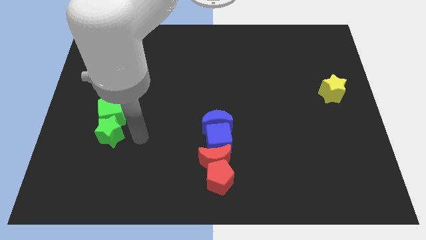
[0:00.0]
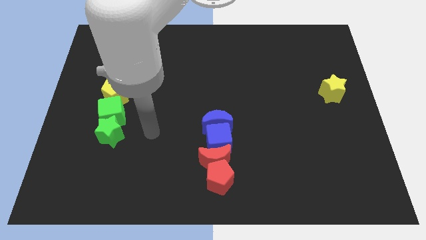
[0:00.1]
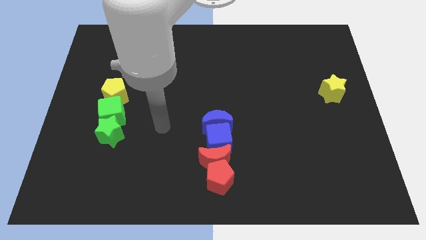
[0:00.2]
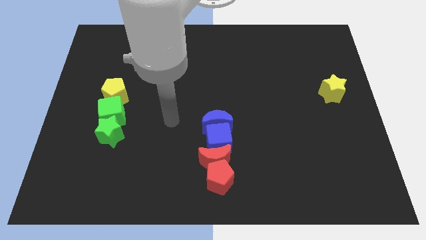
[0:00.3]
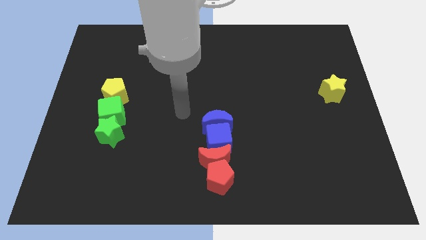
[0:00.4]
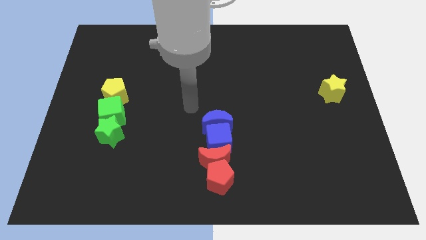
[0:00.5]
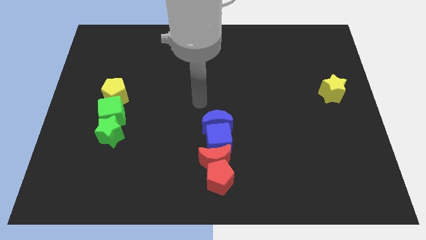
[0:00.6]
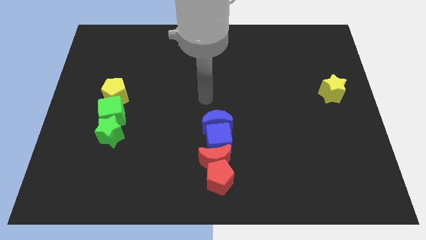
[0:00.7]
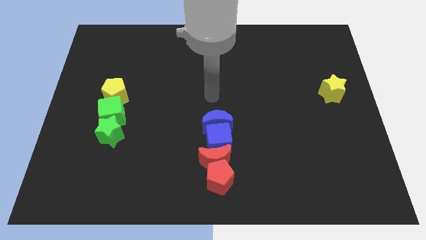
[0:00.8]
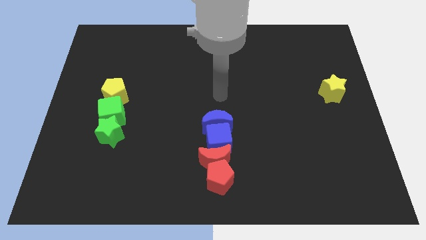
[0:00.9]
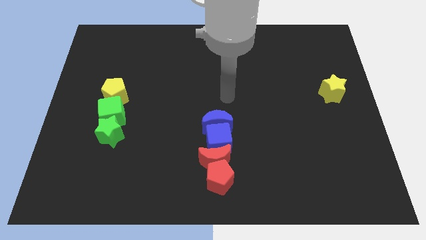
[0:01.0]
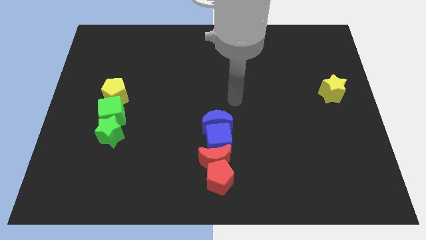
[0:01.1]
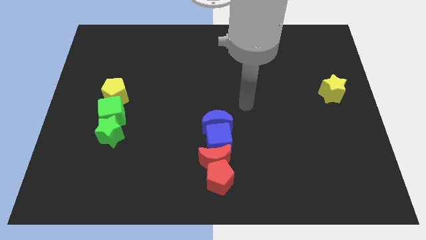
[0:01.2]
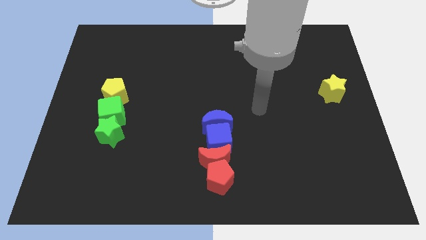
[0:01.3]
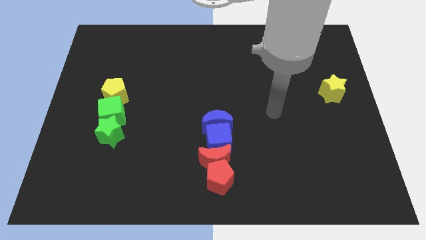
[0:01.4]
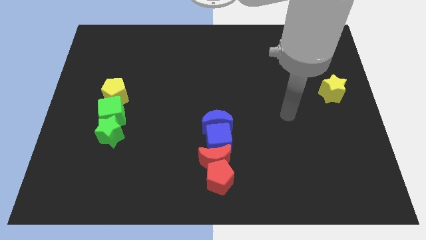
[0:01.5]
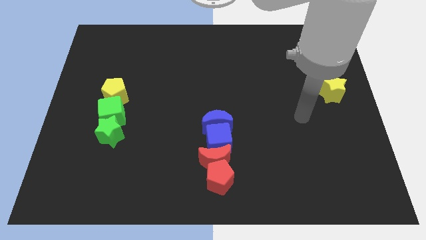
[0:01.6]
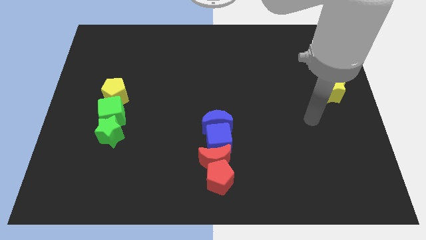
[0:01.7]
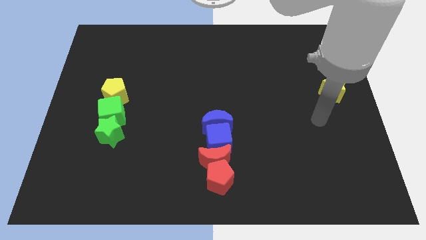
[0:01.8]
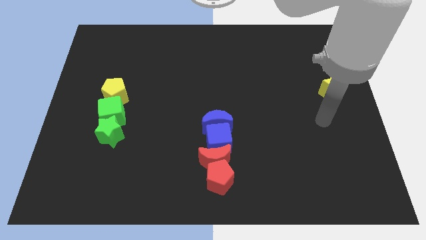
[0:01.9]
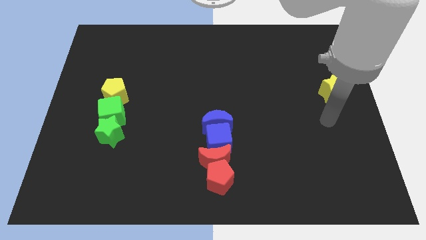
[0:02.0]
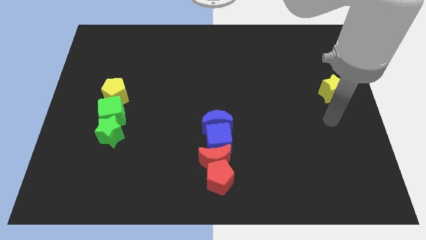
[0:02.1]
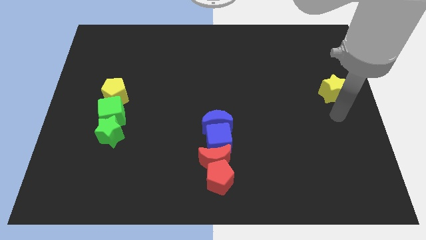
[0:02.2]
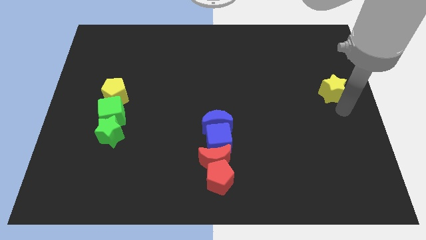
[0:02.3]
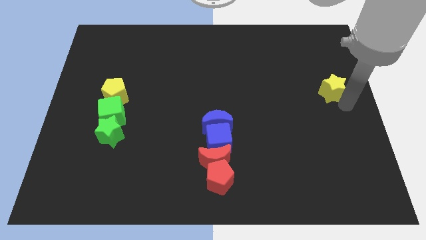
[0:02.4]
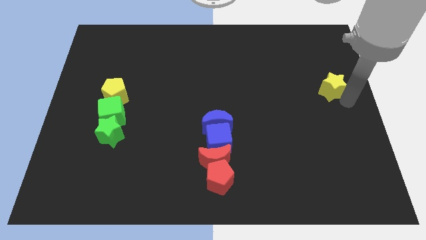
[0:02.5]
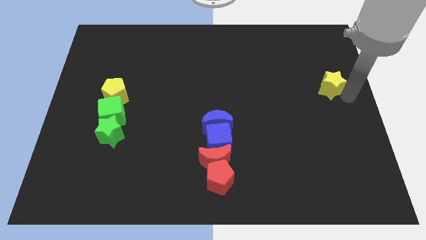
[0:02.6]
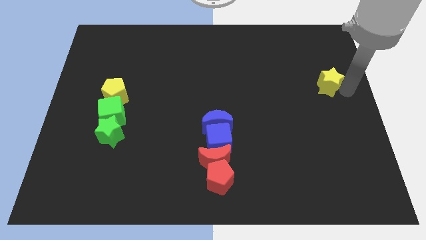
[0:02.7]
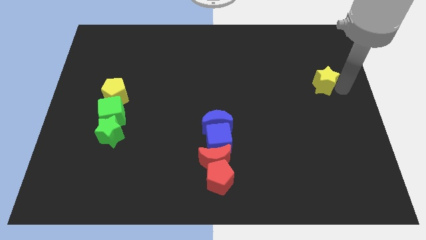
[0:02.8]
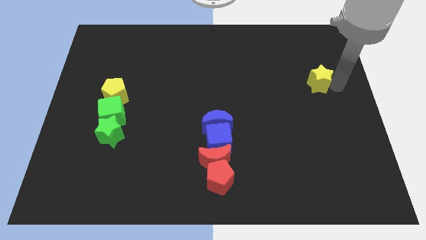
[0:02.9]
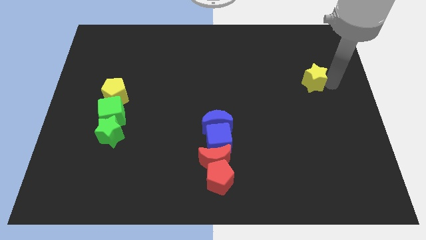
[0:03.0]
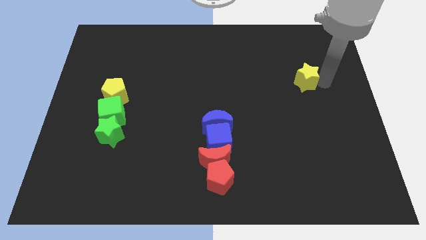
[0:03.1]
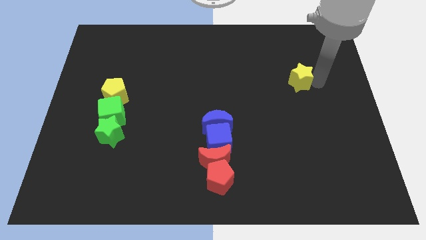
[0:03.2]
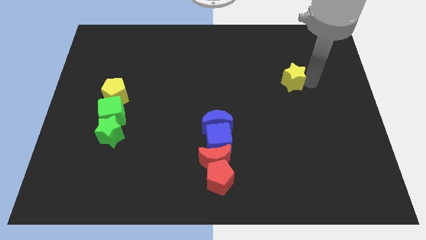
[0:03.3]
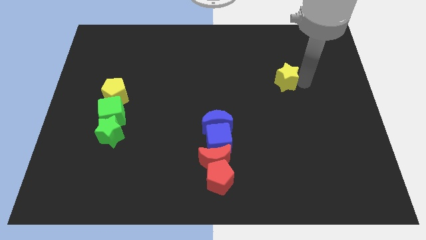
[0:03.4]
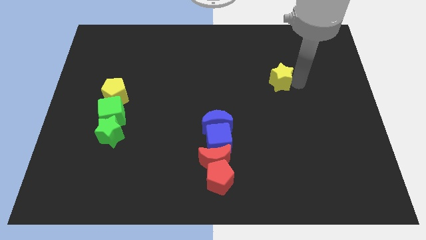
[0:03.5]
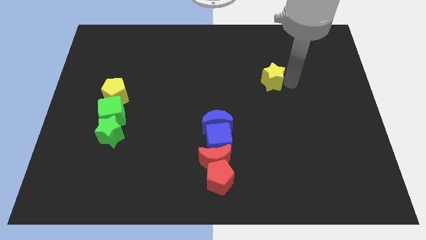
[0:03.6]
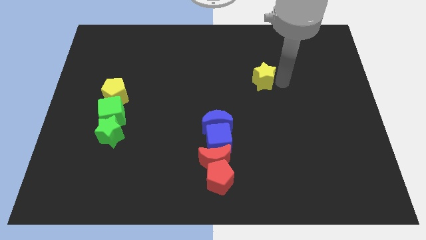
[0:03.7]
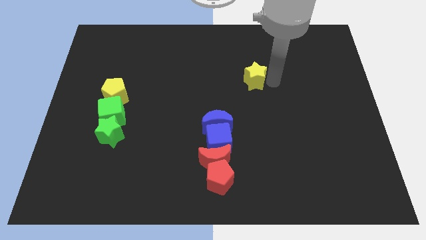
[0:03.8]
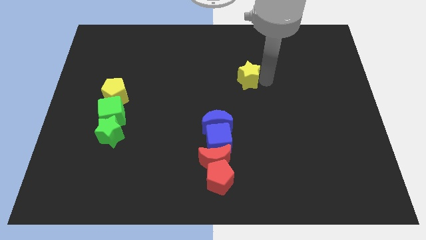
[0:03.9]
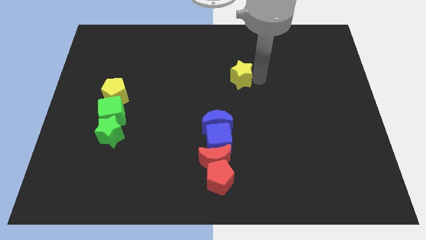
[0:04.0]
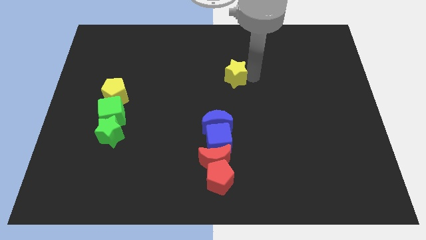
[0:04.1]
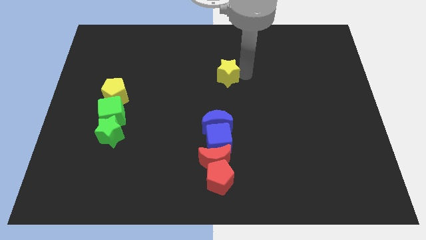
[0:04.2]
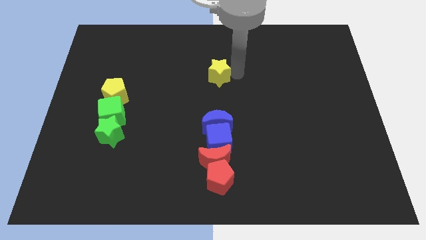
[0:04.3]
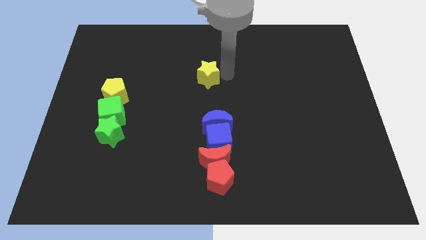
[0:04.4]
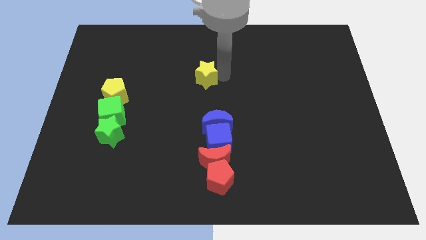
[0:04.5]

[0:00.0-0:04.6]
place yellow star to the top of the blue moon

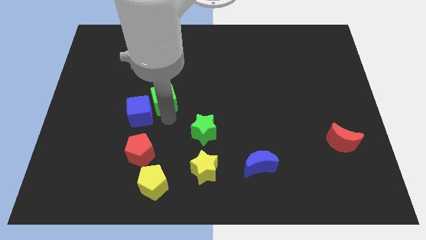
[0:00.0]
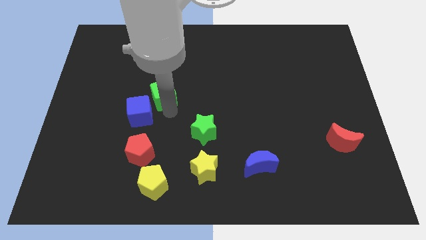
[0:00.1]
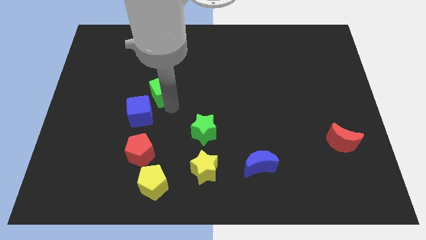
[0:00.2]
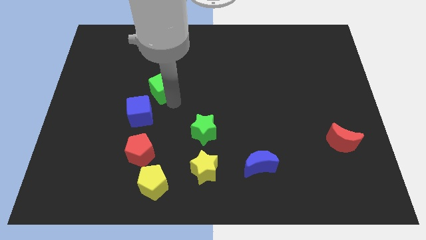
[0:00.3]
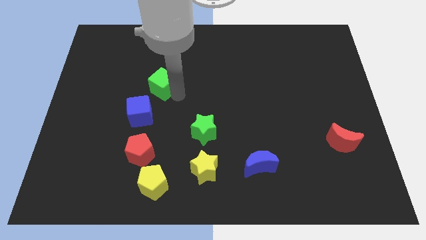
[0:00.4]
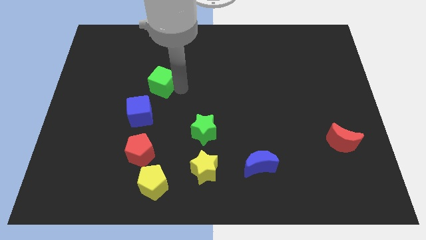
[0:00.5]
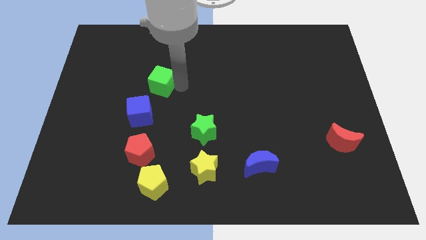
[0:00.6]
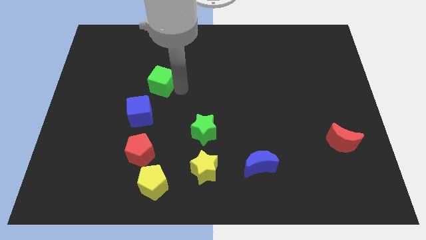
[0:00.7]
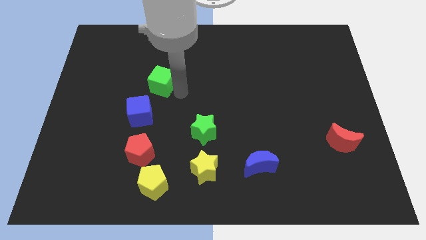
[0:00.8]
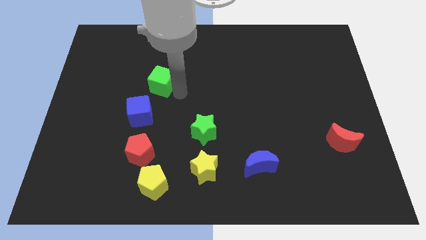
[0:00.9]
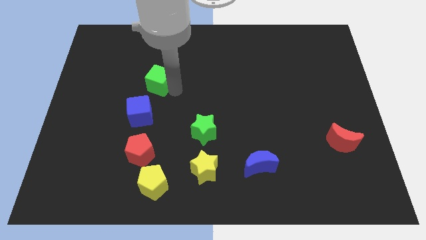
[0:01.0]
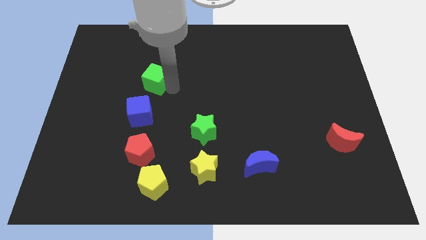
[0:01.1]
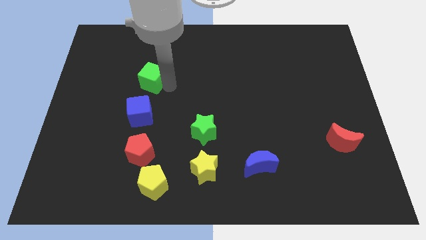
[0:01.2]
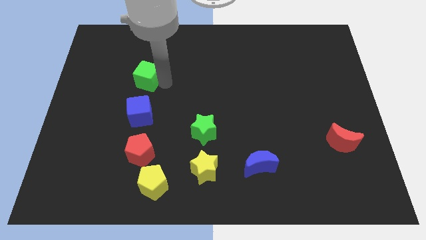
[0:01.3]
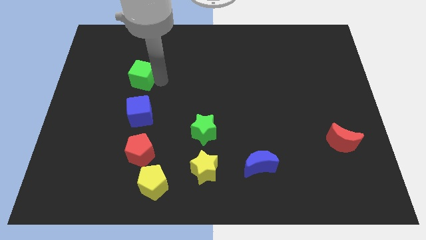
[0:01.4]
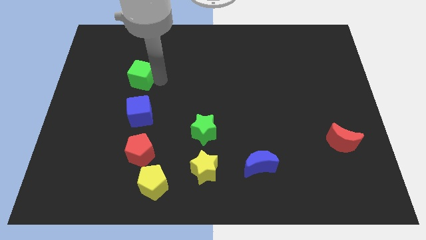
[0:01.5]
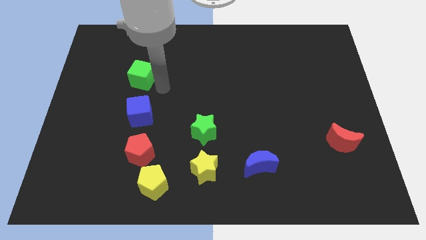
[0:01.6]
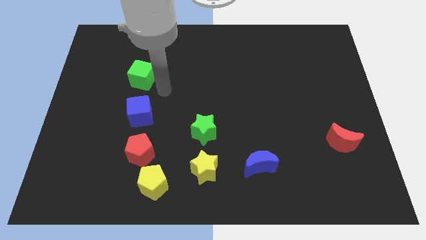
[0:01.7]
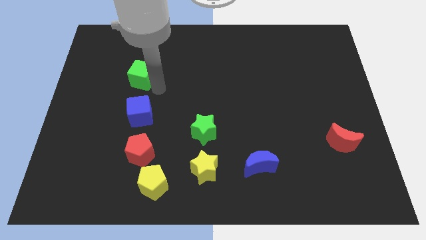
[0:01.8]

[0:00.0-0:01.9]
move the green cube to the top side of the blue cube

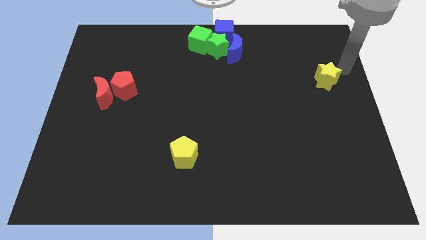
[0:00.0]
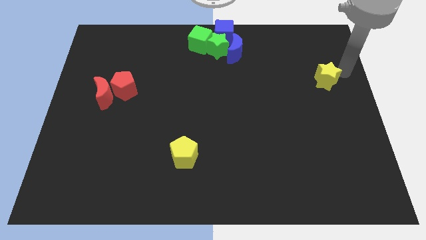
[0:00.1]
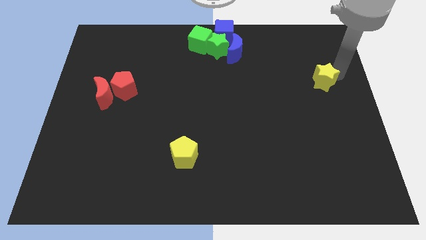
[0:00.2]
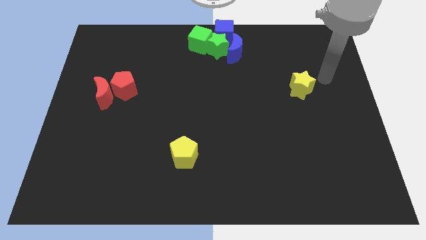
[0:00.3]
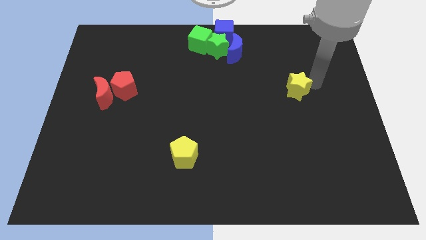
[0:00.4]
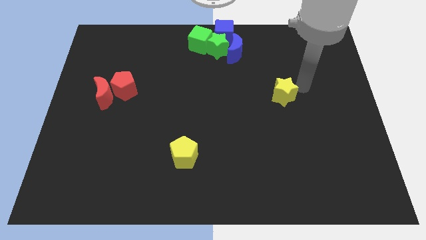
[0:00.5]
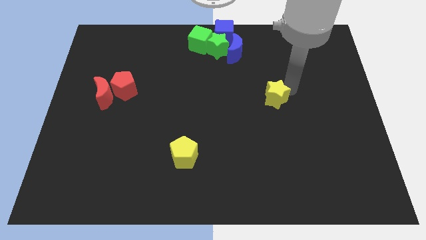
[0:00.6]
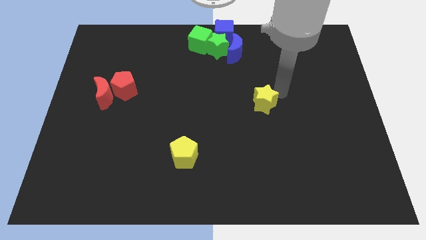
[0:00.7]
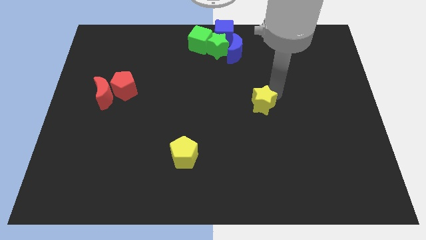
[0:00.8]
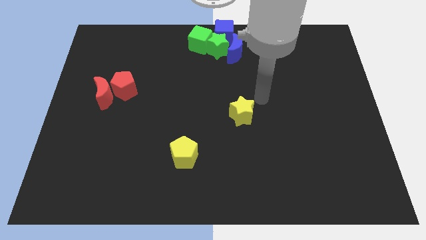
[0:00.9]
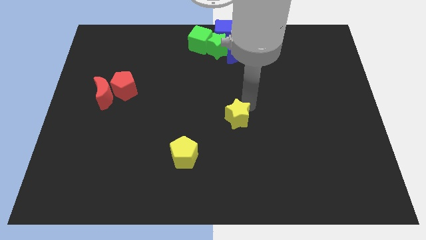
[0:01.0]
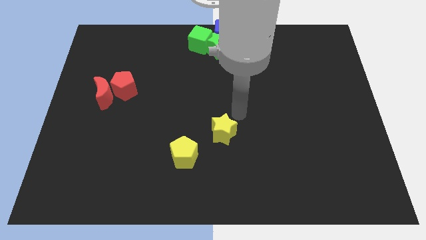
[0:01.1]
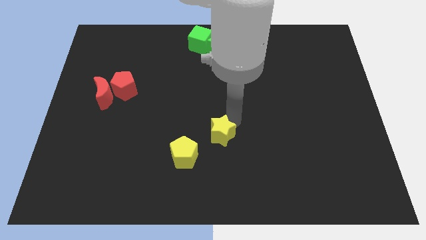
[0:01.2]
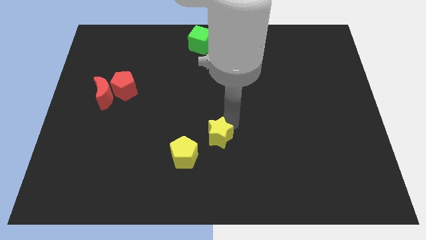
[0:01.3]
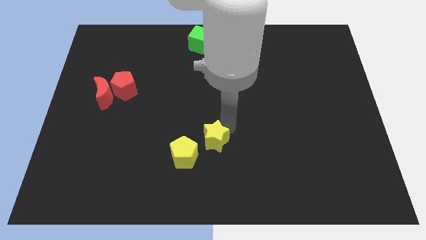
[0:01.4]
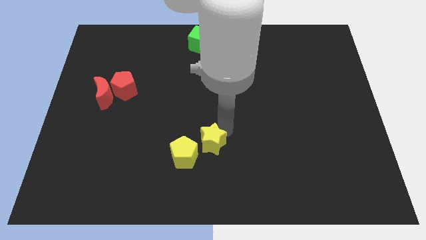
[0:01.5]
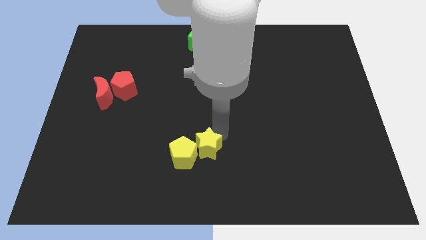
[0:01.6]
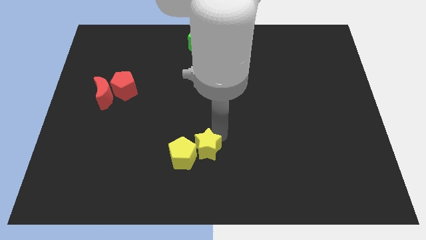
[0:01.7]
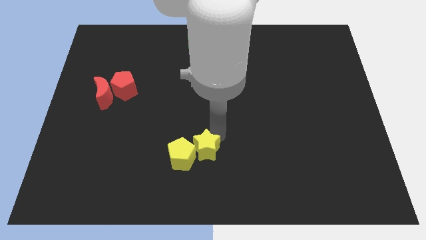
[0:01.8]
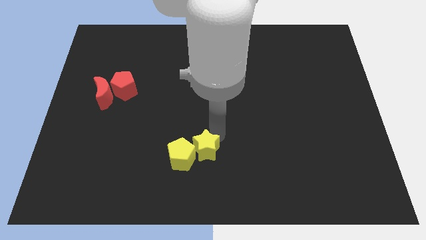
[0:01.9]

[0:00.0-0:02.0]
place the yellow star at the top right of the yellow pentagon

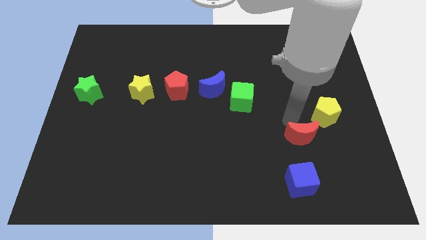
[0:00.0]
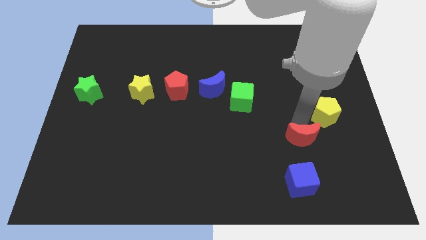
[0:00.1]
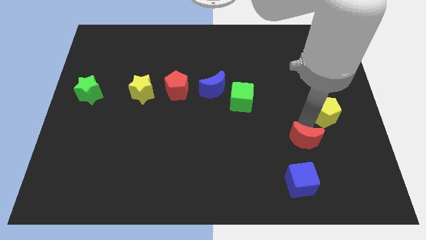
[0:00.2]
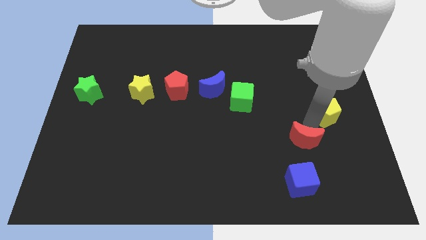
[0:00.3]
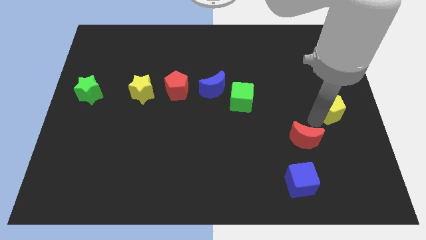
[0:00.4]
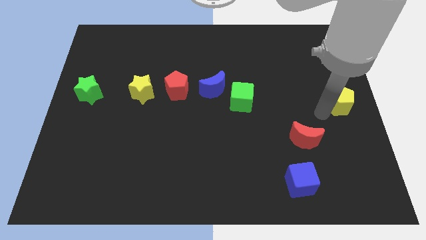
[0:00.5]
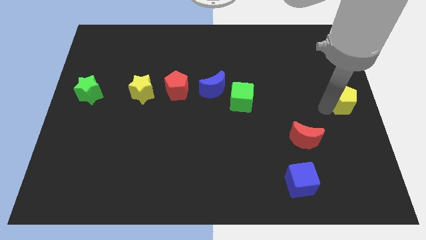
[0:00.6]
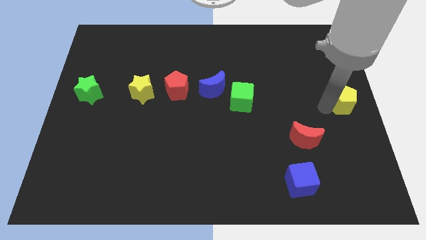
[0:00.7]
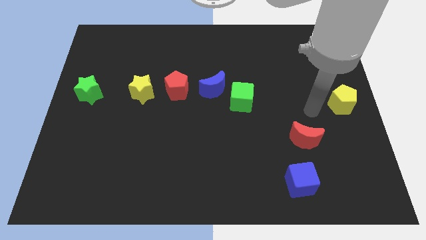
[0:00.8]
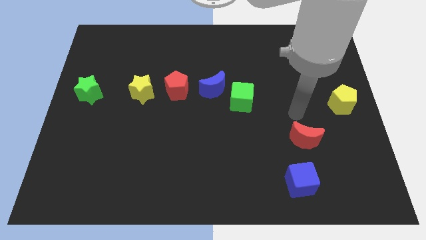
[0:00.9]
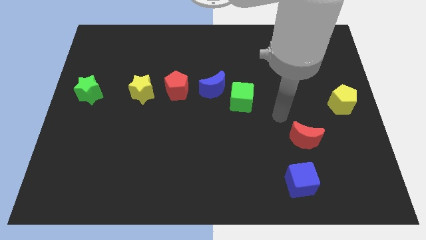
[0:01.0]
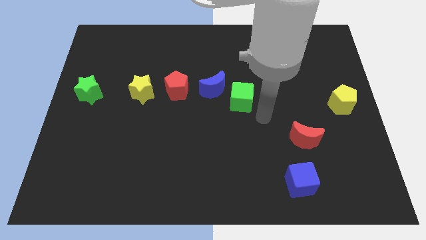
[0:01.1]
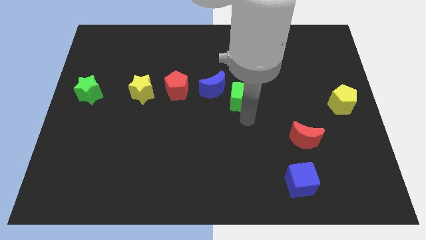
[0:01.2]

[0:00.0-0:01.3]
push the yellow pentagon to the right of the board
